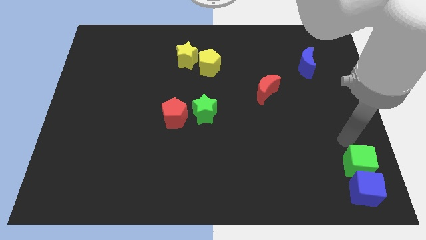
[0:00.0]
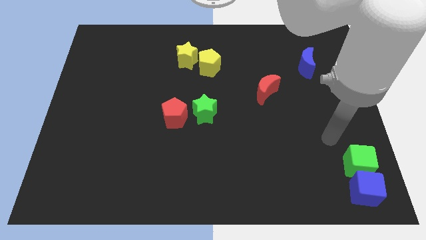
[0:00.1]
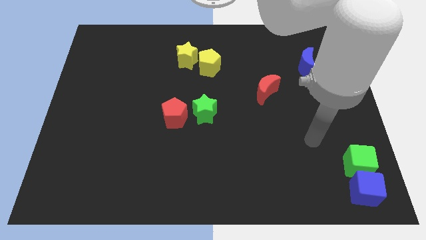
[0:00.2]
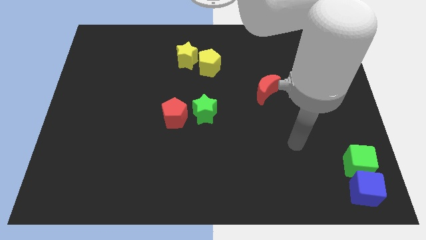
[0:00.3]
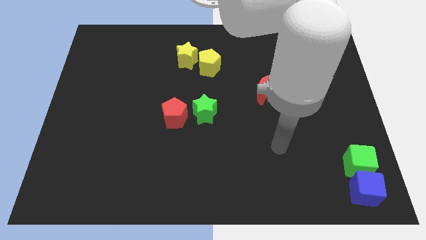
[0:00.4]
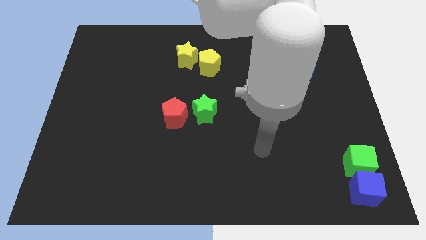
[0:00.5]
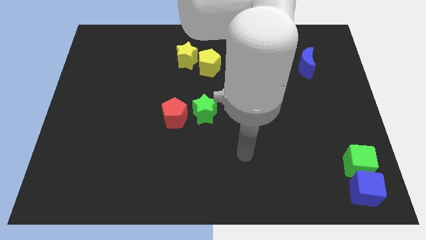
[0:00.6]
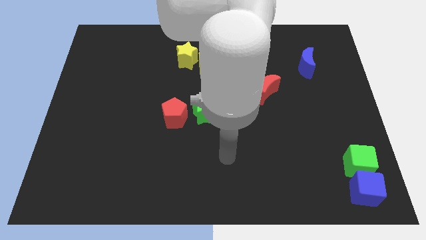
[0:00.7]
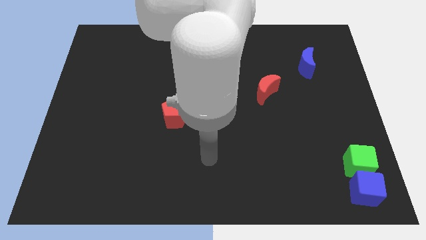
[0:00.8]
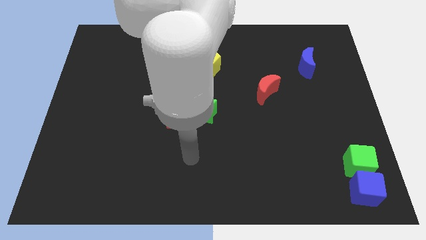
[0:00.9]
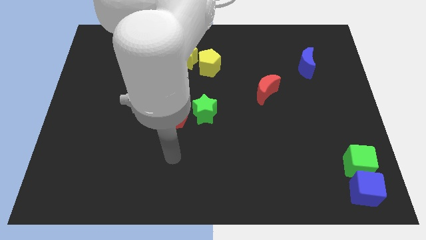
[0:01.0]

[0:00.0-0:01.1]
point the arm below the red pentagon

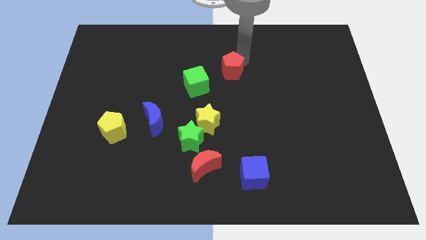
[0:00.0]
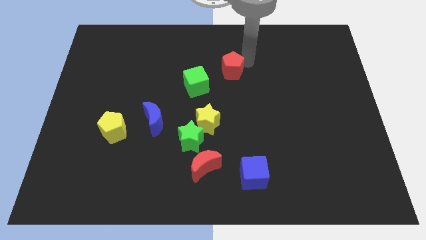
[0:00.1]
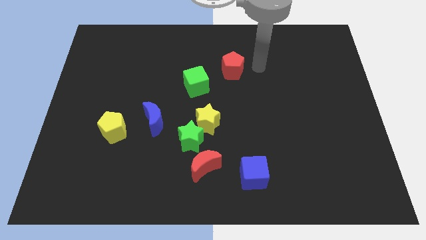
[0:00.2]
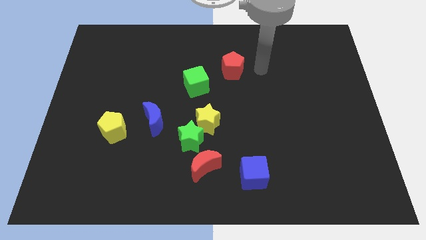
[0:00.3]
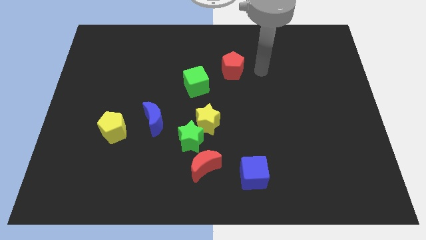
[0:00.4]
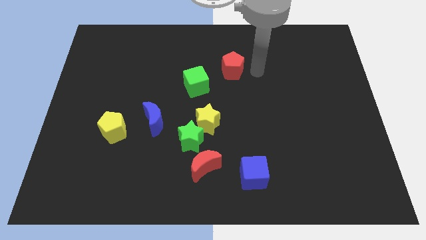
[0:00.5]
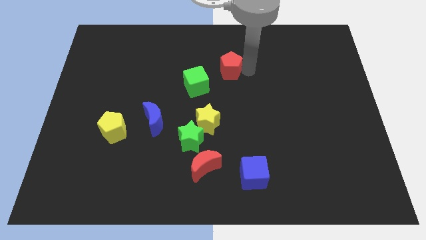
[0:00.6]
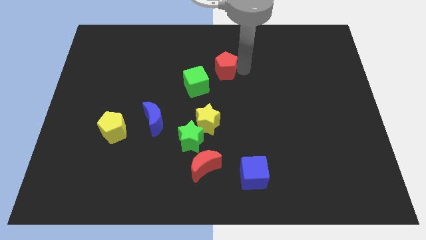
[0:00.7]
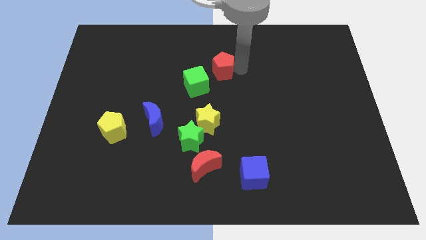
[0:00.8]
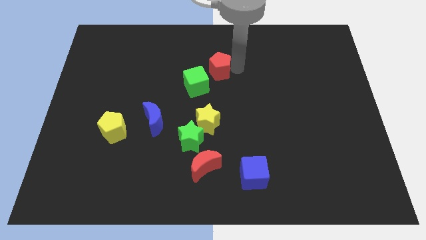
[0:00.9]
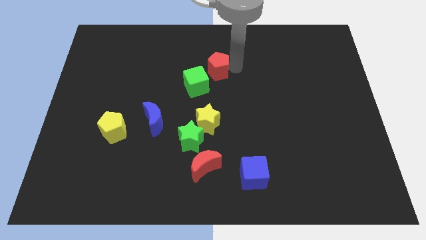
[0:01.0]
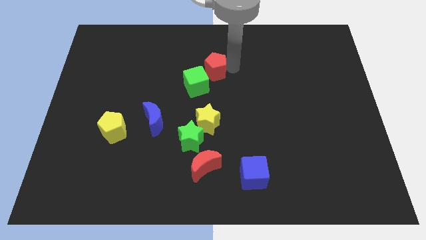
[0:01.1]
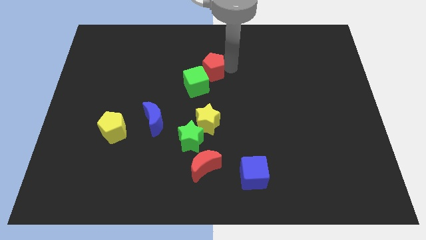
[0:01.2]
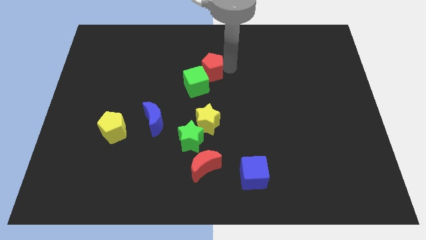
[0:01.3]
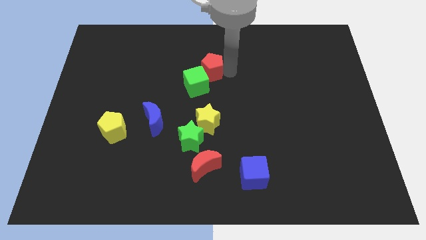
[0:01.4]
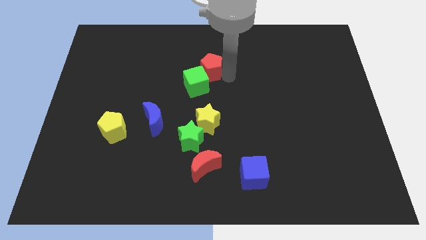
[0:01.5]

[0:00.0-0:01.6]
push the red pentagon into the green cube

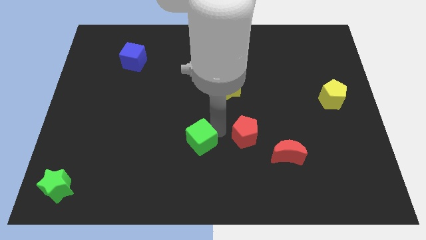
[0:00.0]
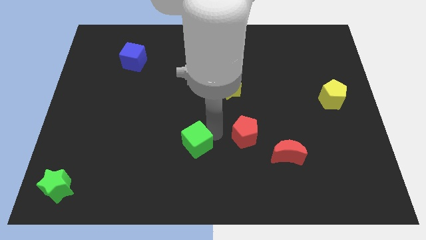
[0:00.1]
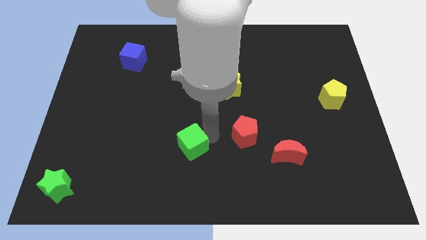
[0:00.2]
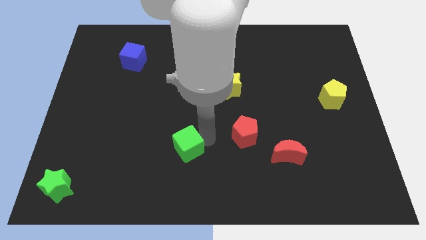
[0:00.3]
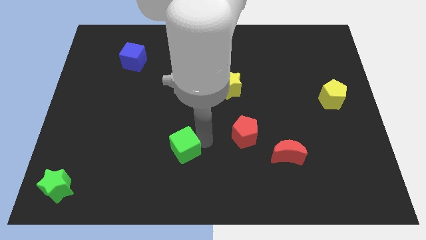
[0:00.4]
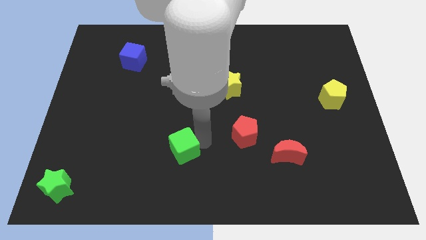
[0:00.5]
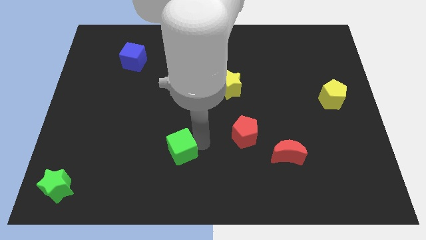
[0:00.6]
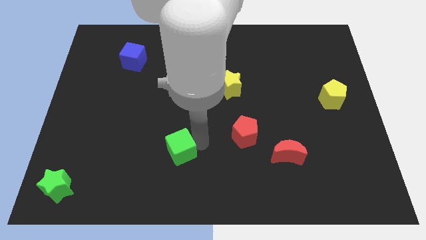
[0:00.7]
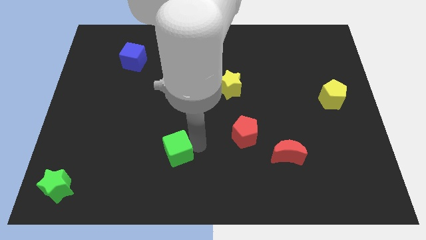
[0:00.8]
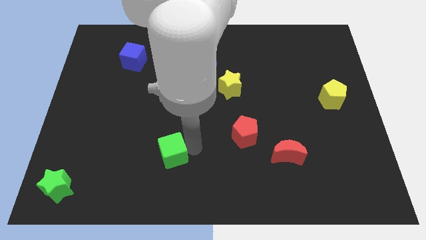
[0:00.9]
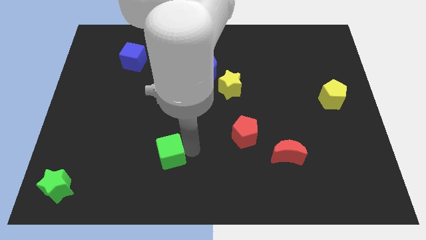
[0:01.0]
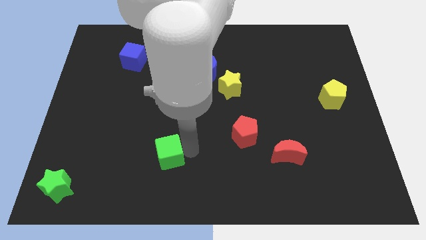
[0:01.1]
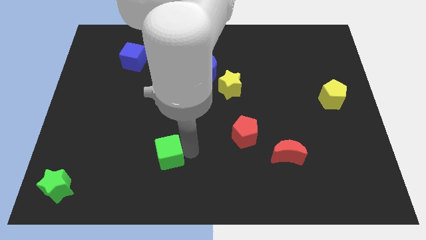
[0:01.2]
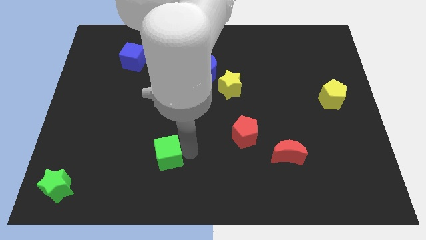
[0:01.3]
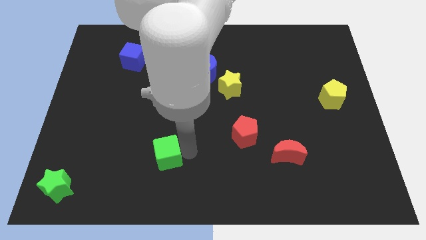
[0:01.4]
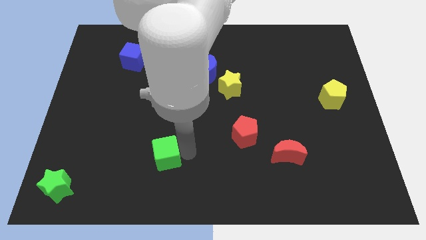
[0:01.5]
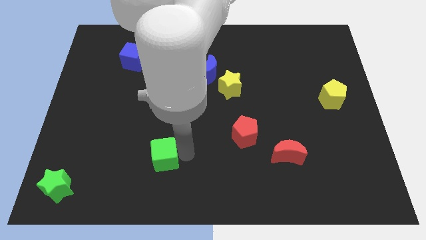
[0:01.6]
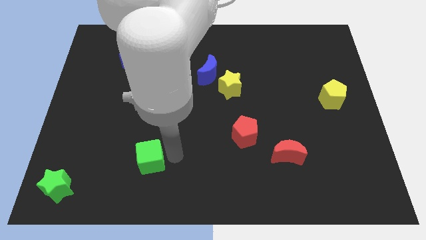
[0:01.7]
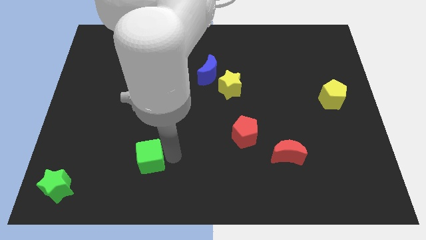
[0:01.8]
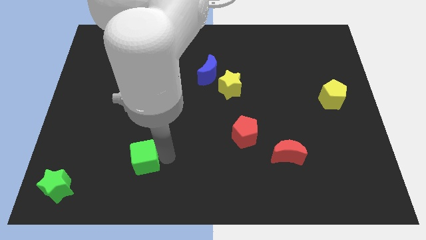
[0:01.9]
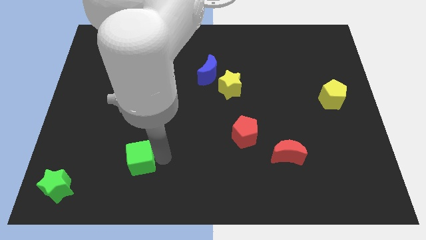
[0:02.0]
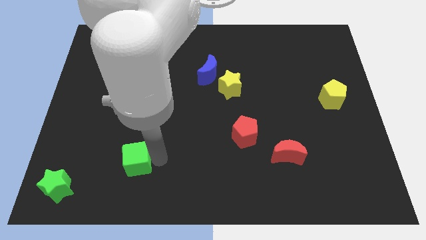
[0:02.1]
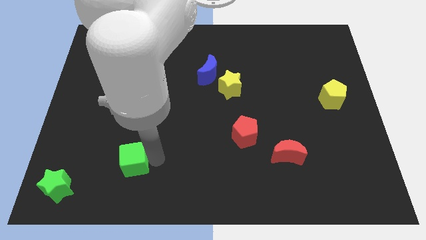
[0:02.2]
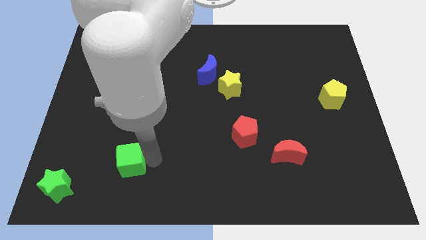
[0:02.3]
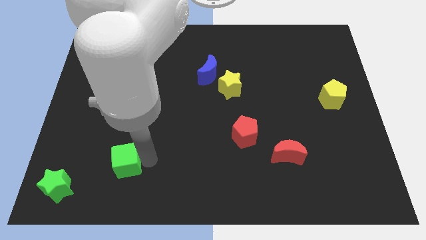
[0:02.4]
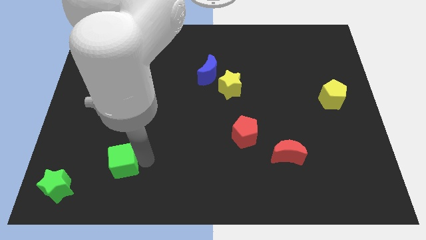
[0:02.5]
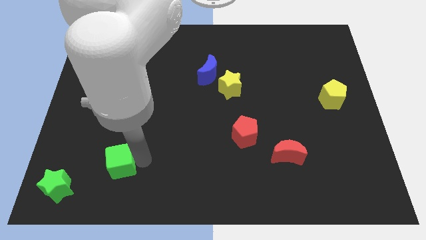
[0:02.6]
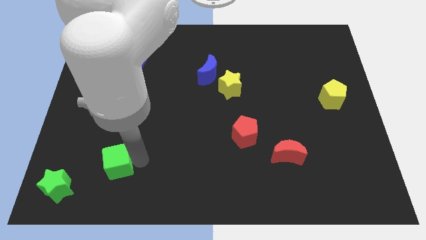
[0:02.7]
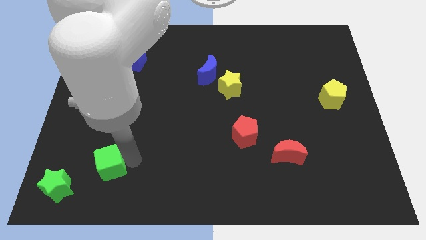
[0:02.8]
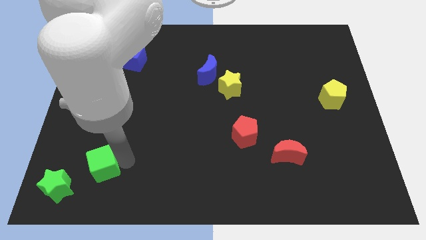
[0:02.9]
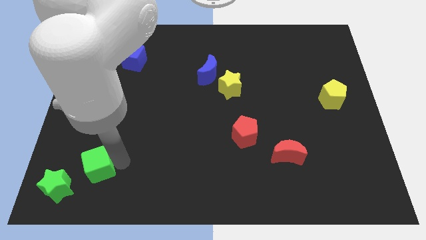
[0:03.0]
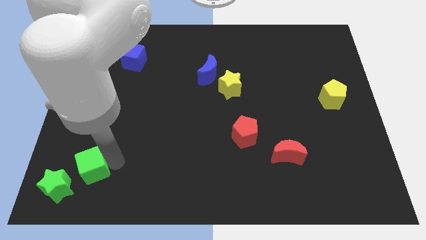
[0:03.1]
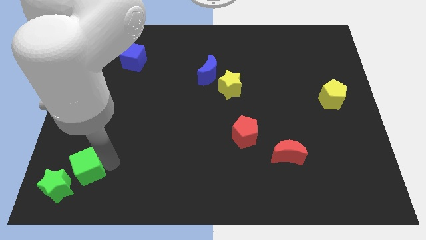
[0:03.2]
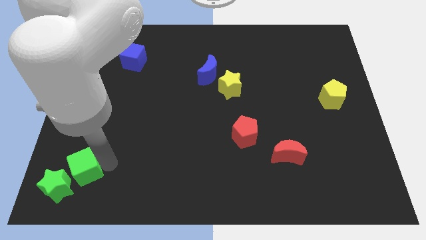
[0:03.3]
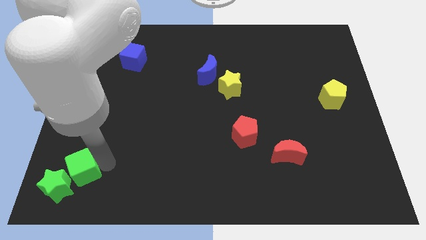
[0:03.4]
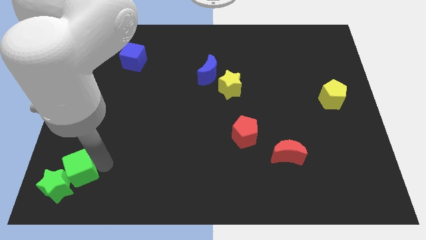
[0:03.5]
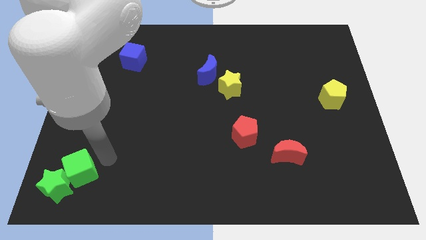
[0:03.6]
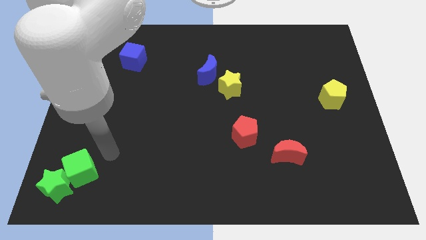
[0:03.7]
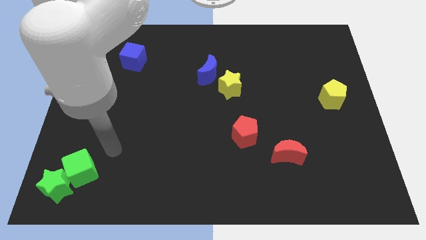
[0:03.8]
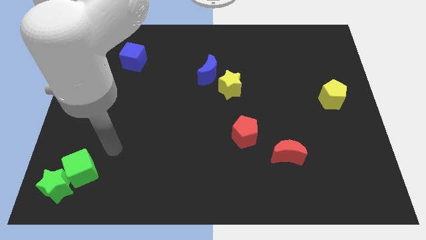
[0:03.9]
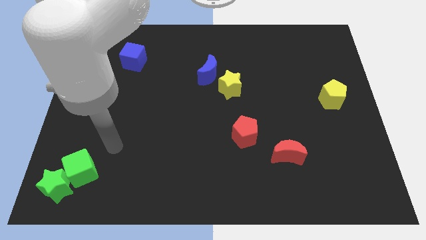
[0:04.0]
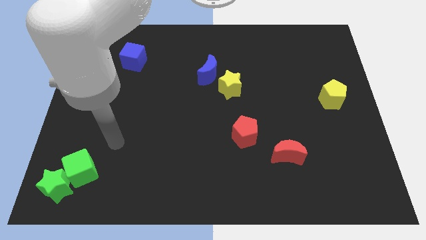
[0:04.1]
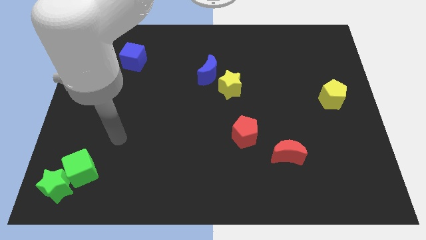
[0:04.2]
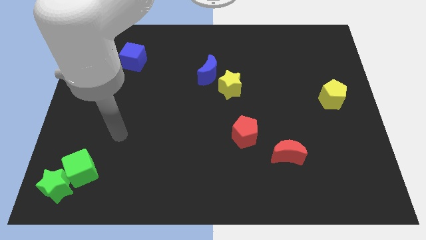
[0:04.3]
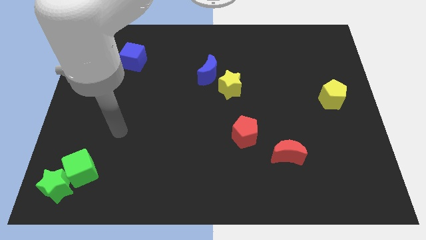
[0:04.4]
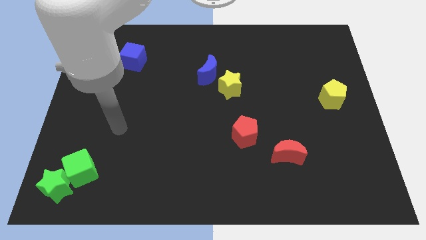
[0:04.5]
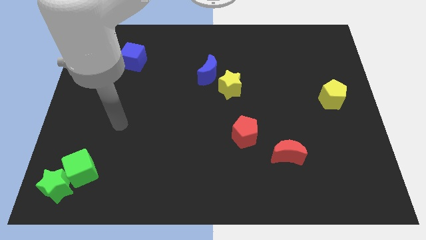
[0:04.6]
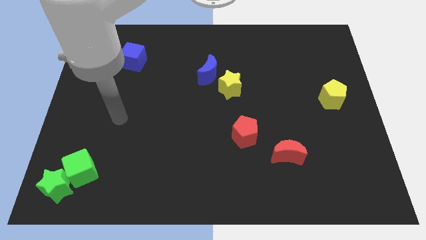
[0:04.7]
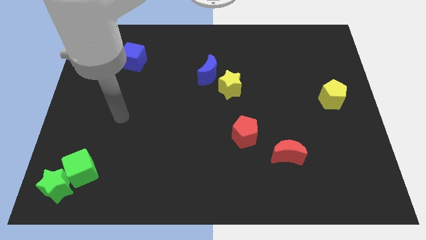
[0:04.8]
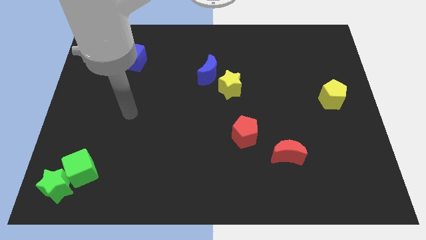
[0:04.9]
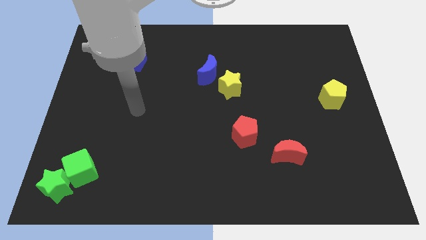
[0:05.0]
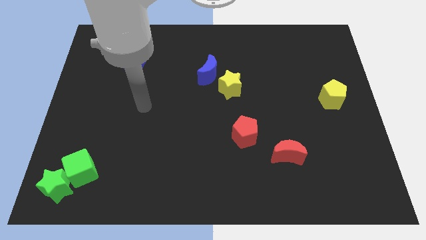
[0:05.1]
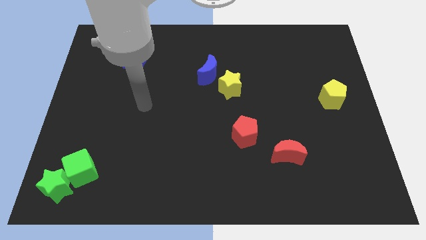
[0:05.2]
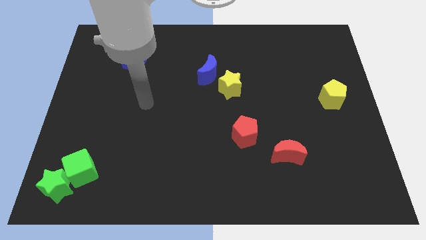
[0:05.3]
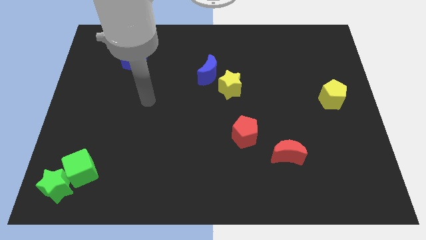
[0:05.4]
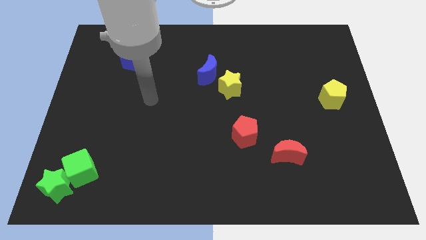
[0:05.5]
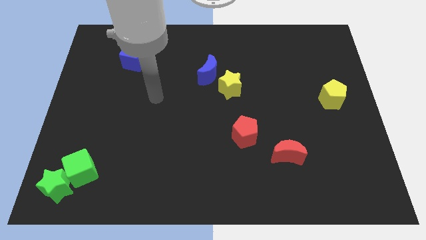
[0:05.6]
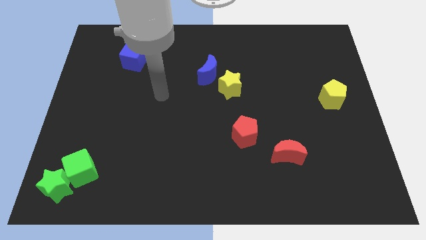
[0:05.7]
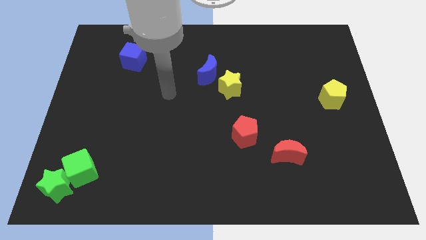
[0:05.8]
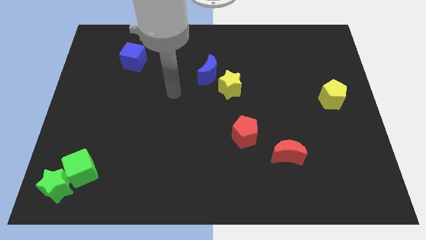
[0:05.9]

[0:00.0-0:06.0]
move the green cube to the top right of the green star

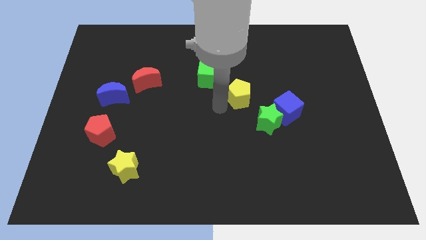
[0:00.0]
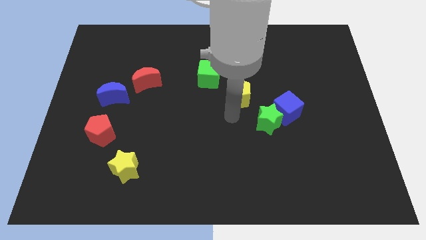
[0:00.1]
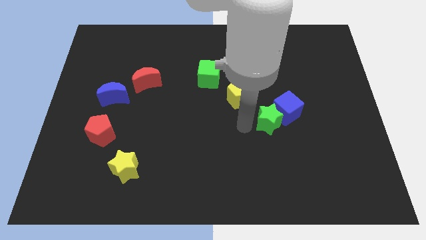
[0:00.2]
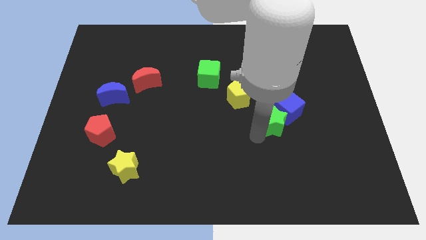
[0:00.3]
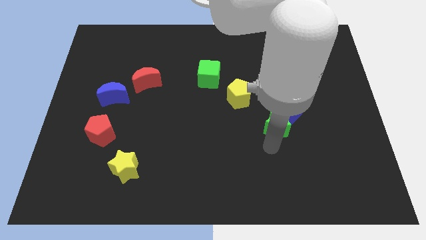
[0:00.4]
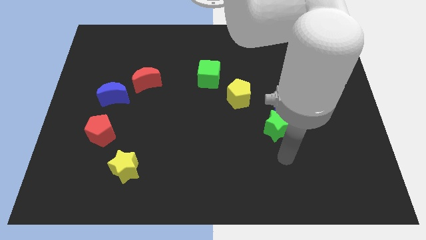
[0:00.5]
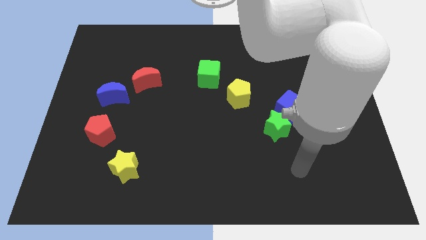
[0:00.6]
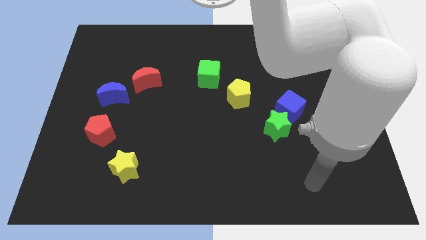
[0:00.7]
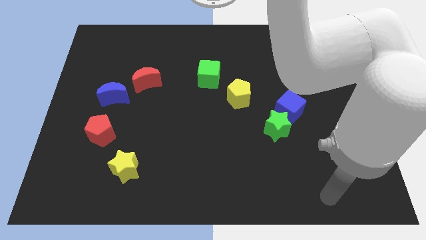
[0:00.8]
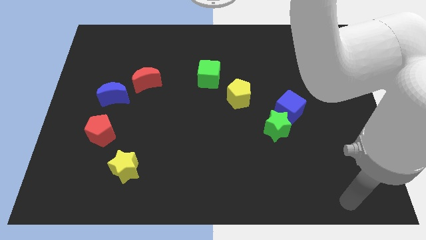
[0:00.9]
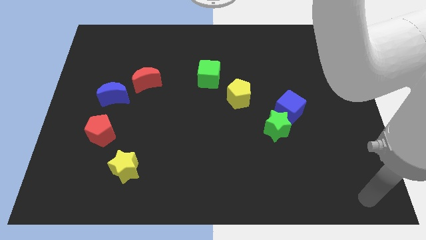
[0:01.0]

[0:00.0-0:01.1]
move your arm away from the yellow pentagon
